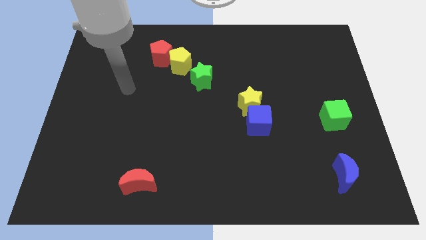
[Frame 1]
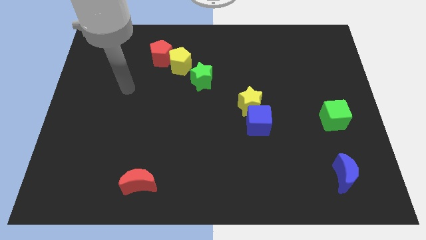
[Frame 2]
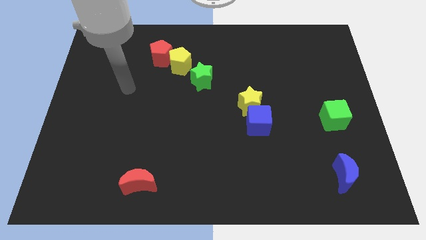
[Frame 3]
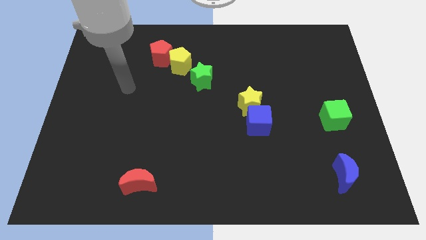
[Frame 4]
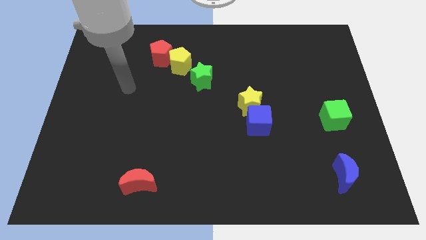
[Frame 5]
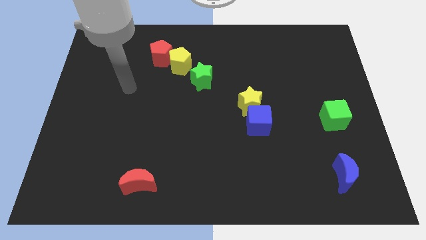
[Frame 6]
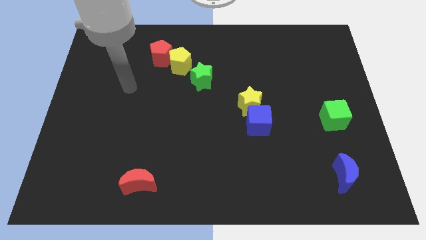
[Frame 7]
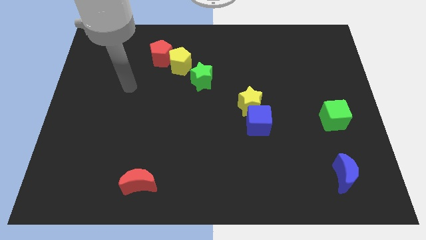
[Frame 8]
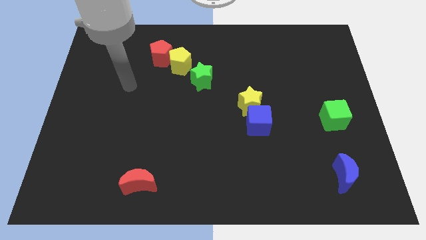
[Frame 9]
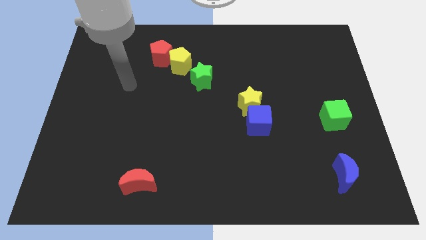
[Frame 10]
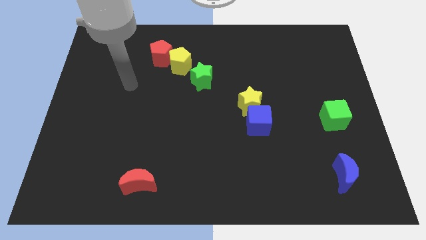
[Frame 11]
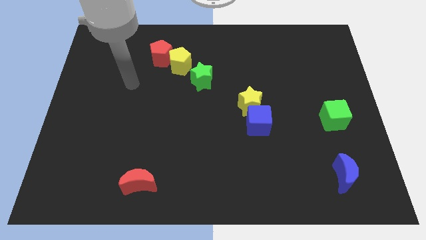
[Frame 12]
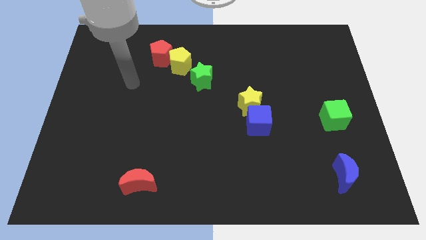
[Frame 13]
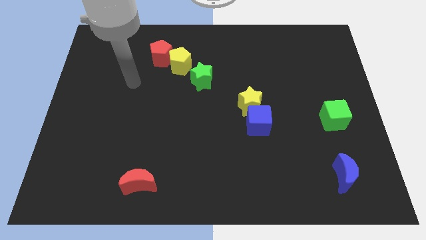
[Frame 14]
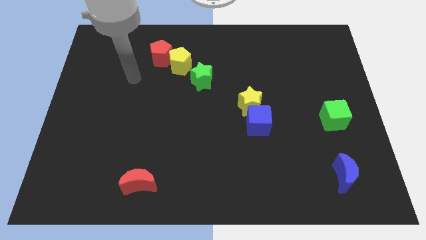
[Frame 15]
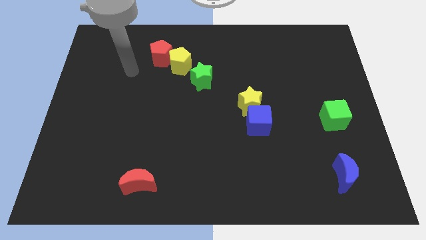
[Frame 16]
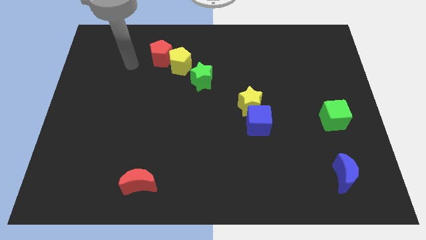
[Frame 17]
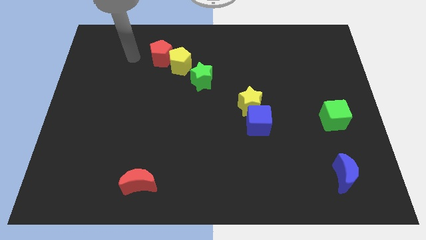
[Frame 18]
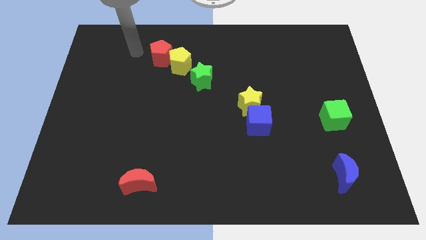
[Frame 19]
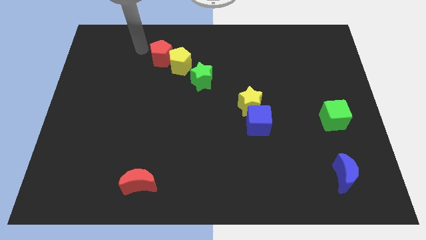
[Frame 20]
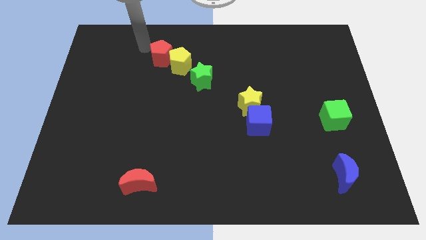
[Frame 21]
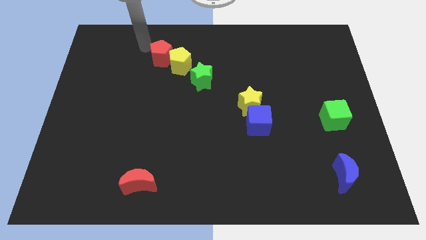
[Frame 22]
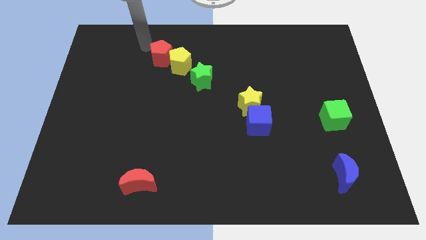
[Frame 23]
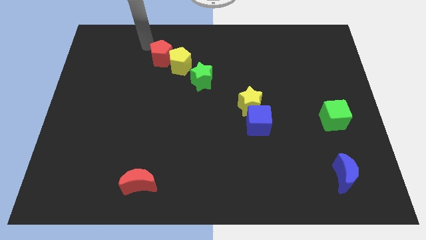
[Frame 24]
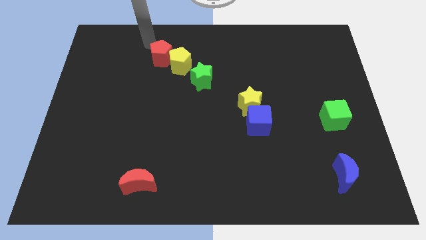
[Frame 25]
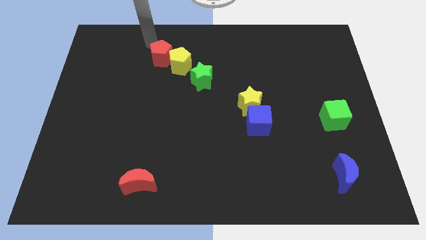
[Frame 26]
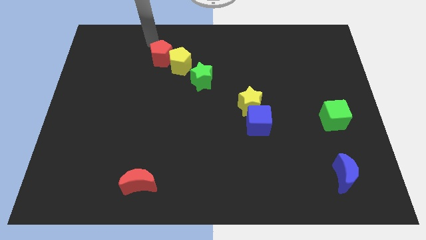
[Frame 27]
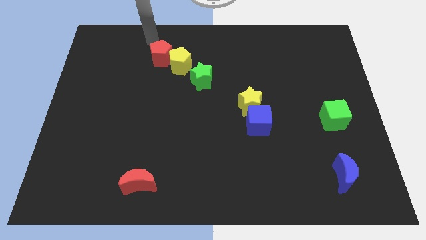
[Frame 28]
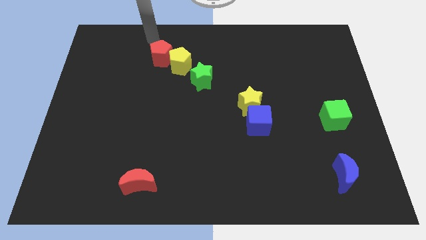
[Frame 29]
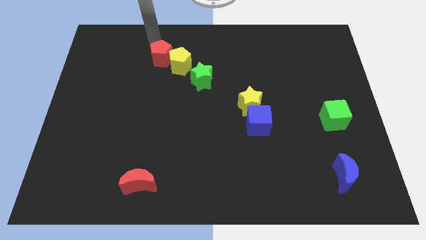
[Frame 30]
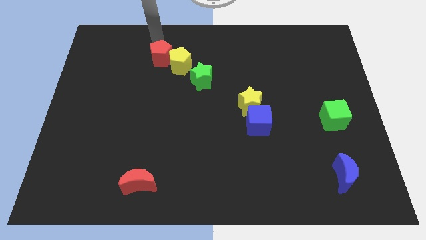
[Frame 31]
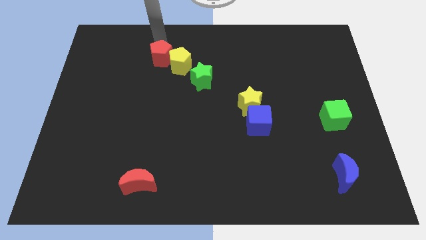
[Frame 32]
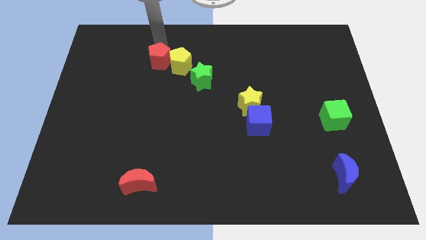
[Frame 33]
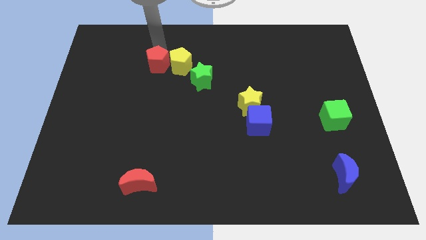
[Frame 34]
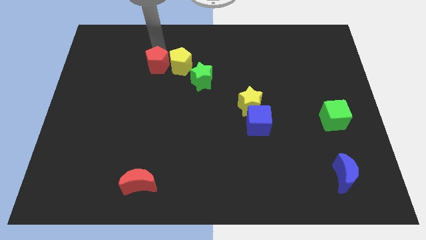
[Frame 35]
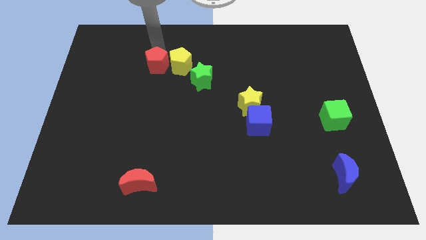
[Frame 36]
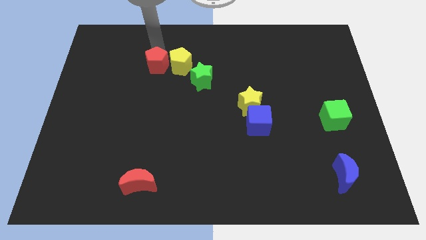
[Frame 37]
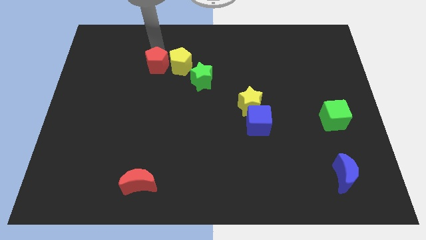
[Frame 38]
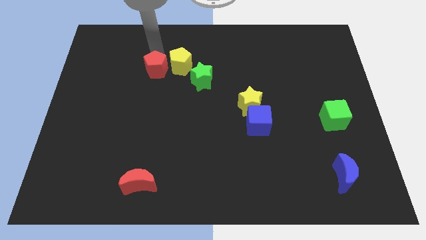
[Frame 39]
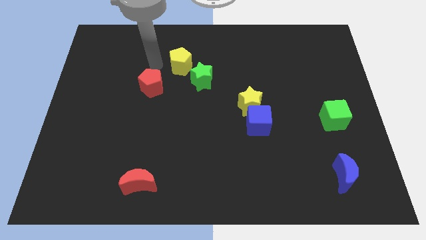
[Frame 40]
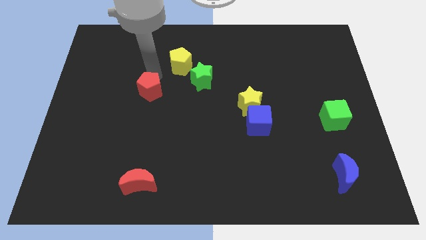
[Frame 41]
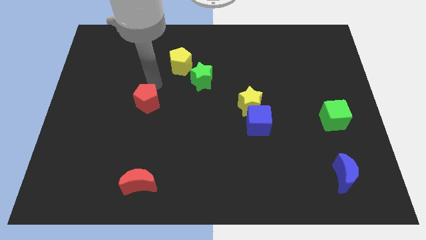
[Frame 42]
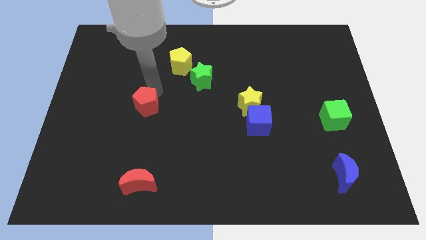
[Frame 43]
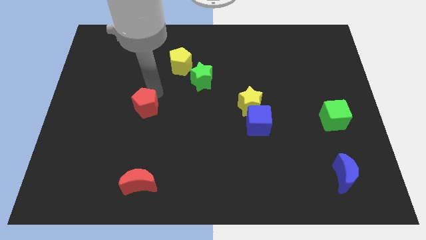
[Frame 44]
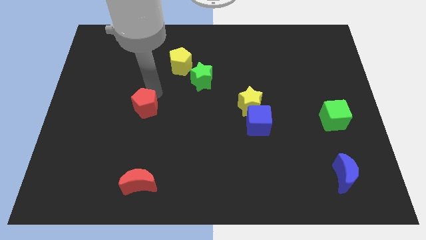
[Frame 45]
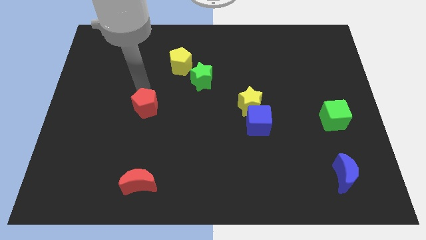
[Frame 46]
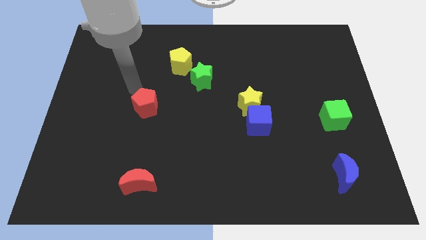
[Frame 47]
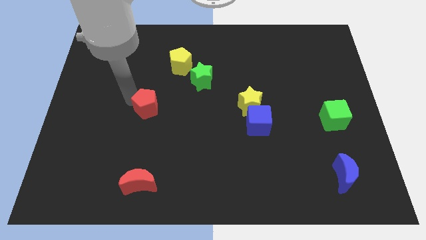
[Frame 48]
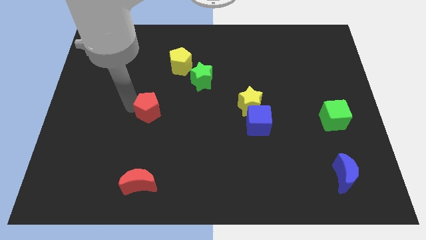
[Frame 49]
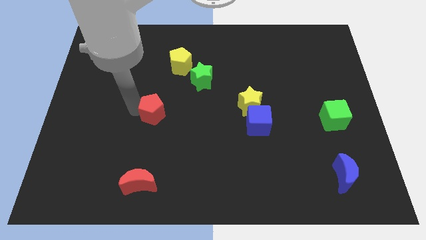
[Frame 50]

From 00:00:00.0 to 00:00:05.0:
push the red pentagon slightly to the bottom side of the board

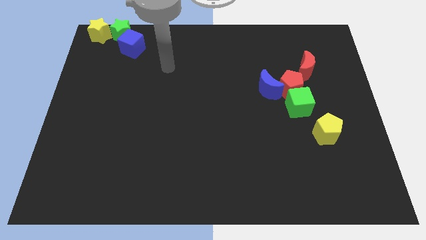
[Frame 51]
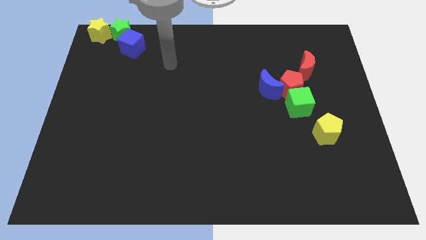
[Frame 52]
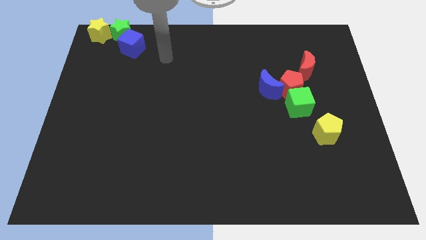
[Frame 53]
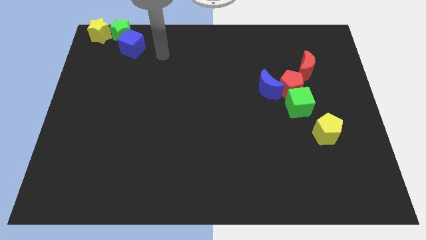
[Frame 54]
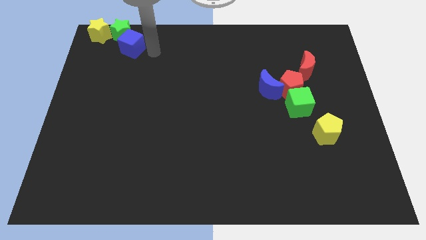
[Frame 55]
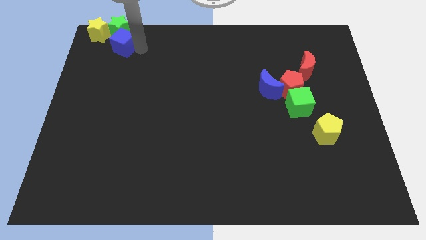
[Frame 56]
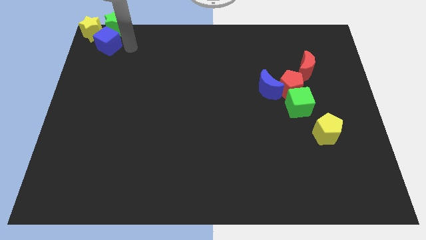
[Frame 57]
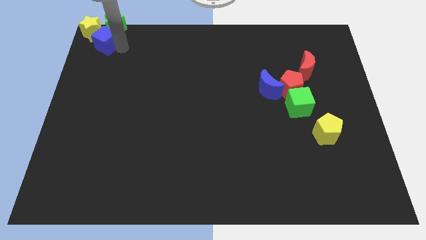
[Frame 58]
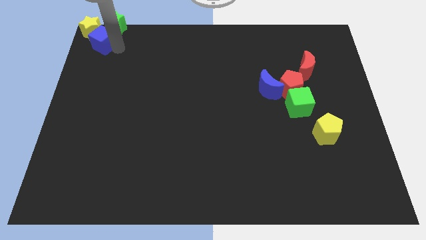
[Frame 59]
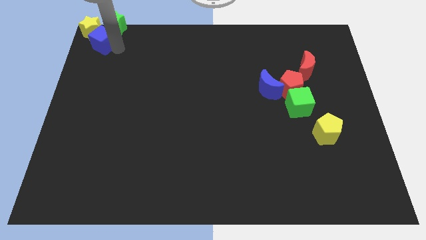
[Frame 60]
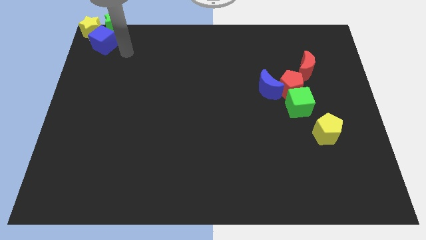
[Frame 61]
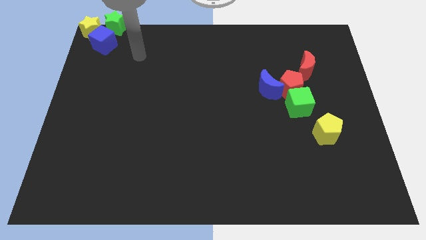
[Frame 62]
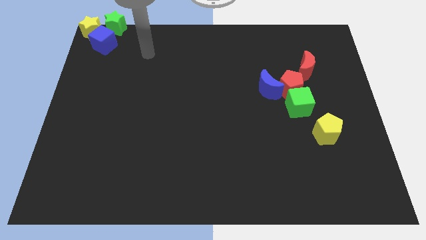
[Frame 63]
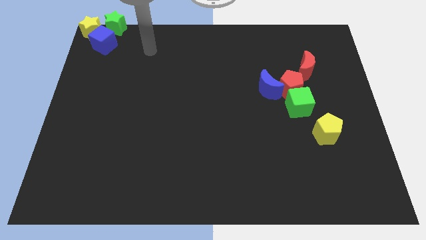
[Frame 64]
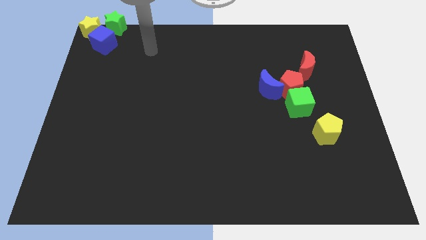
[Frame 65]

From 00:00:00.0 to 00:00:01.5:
move blue cube to the top left corner of the board

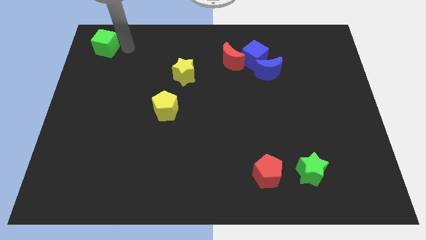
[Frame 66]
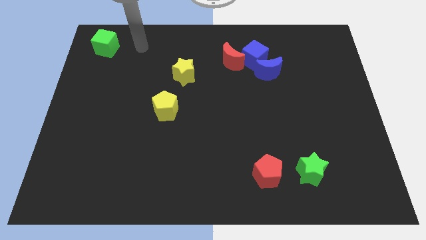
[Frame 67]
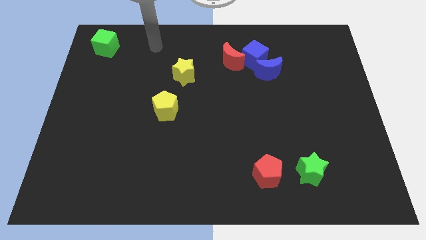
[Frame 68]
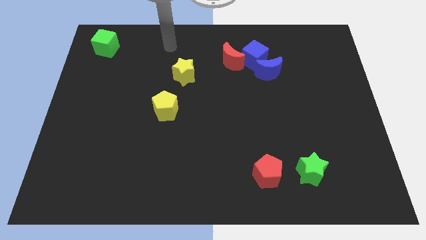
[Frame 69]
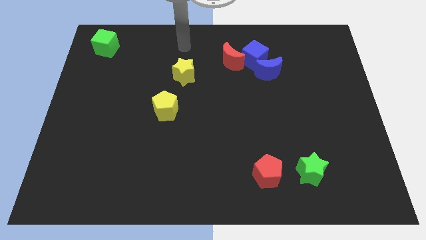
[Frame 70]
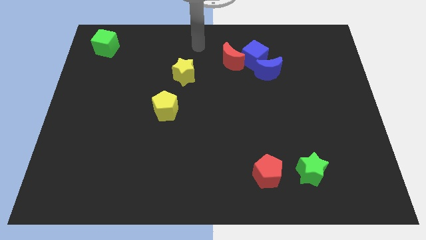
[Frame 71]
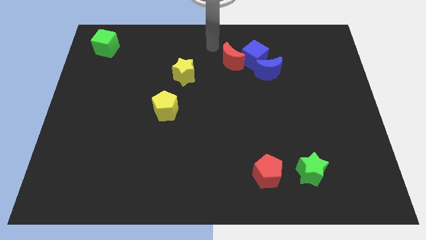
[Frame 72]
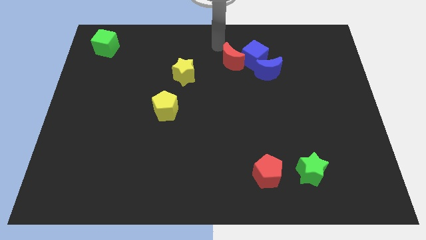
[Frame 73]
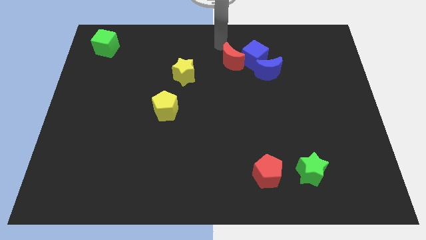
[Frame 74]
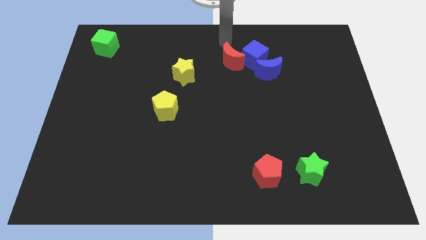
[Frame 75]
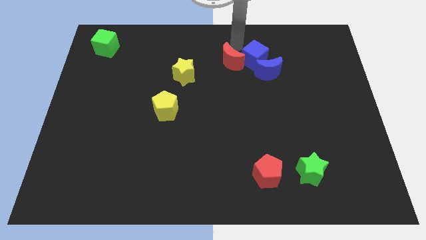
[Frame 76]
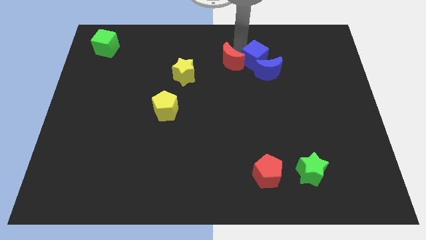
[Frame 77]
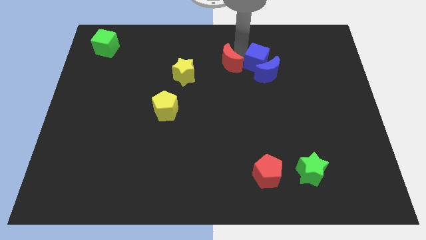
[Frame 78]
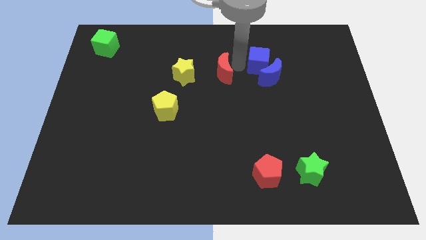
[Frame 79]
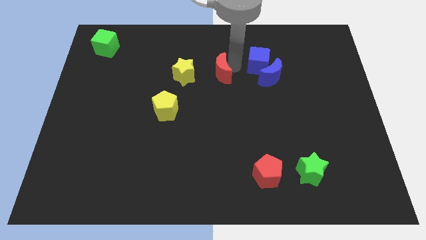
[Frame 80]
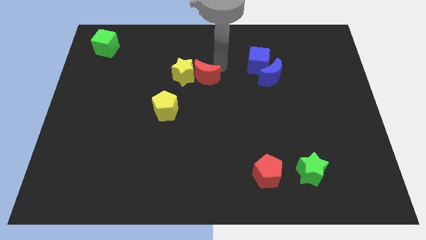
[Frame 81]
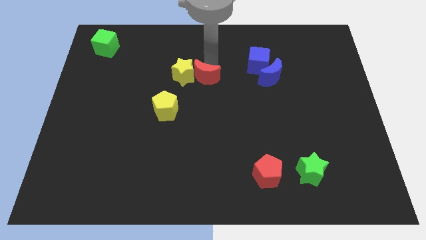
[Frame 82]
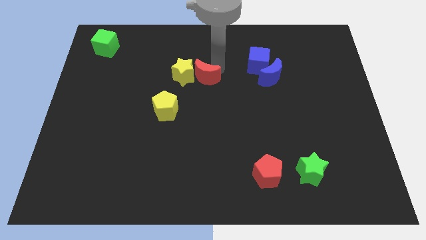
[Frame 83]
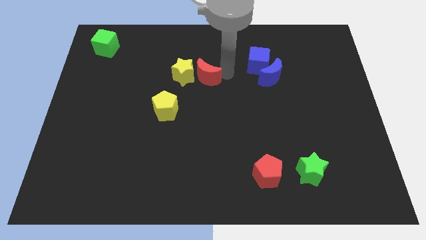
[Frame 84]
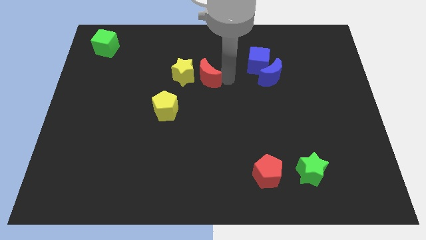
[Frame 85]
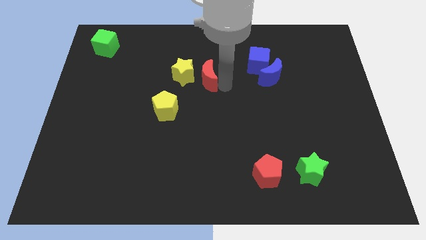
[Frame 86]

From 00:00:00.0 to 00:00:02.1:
push the red moon close to yellow star

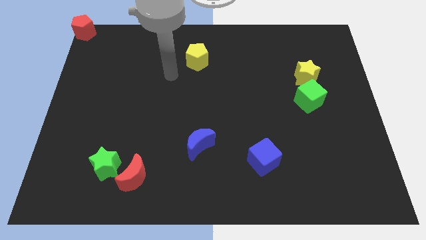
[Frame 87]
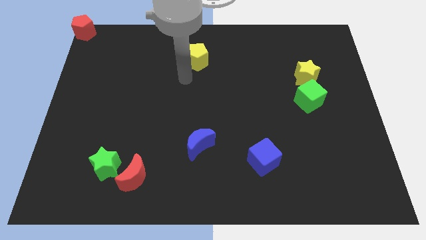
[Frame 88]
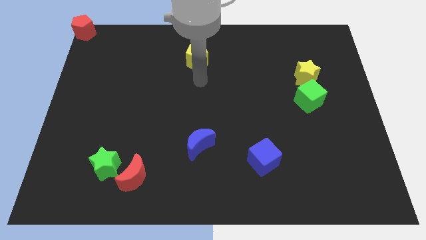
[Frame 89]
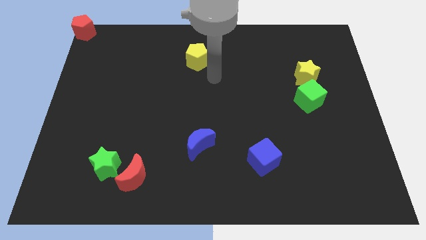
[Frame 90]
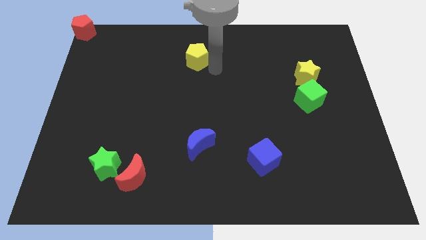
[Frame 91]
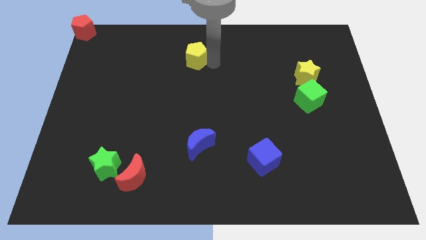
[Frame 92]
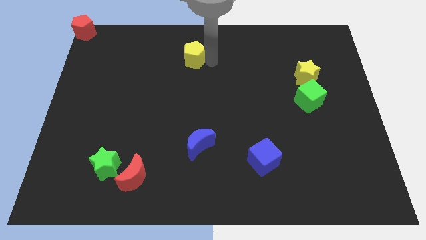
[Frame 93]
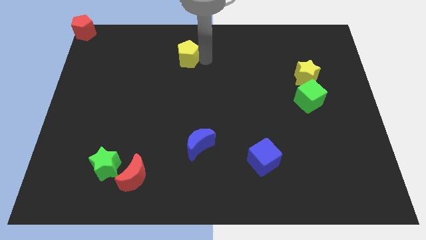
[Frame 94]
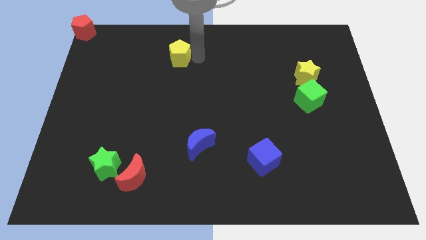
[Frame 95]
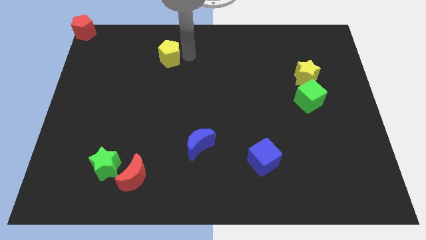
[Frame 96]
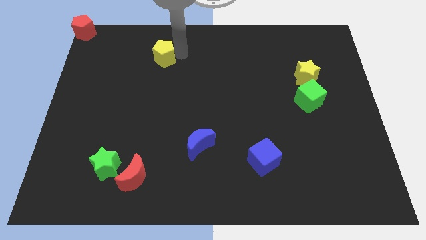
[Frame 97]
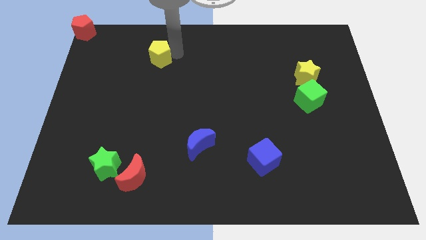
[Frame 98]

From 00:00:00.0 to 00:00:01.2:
move the yellow pentagon slightly to the left
